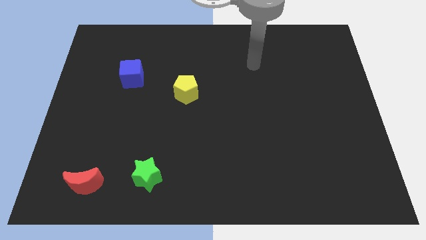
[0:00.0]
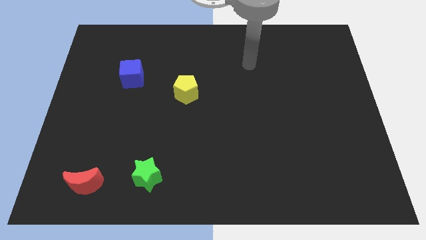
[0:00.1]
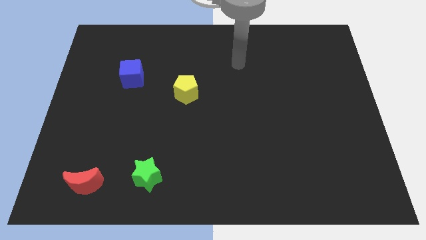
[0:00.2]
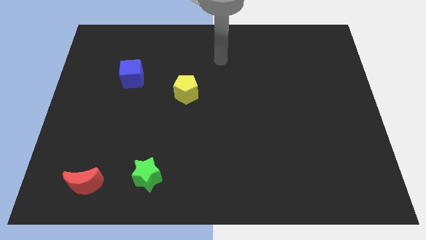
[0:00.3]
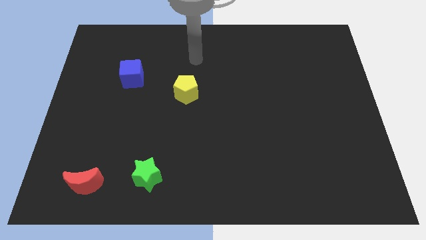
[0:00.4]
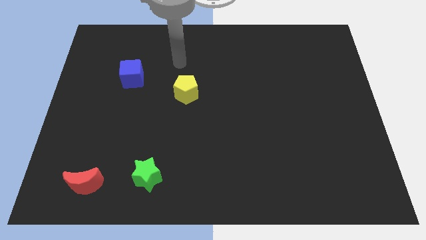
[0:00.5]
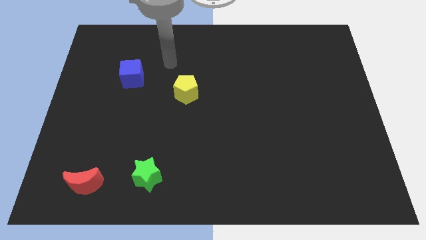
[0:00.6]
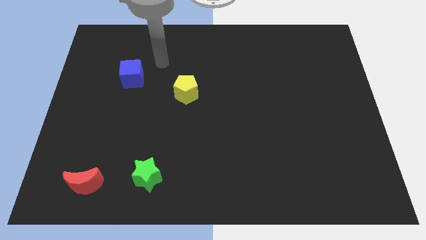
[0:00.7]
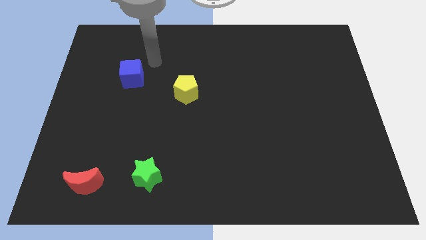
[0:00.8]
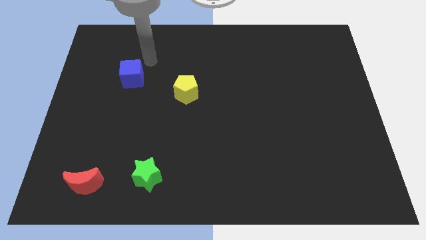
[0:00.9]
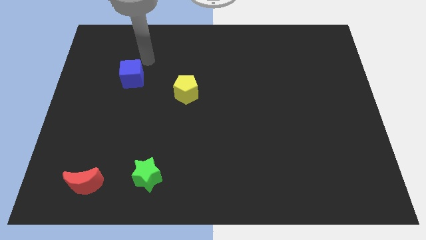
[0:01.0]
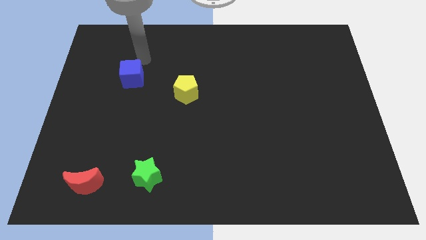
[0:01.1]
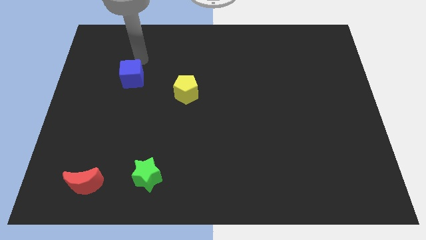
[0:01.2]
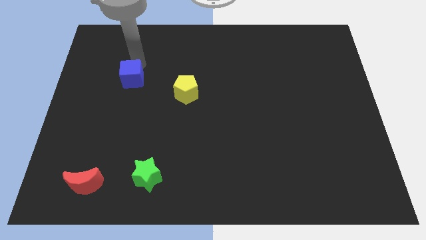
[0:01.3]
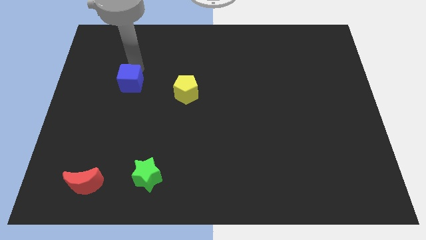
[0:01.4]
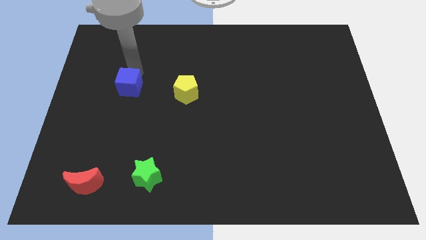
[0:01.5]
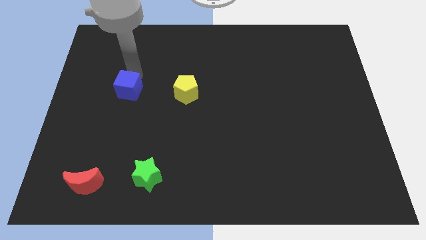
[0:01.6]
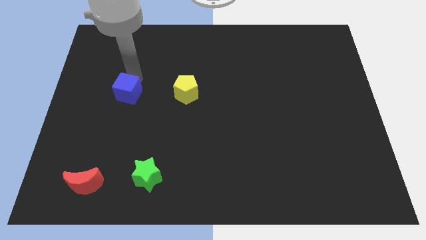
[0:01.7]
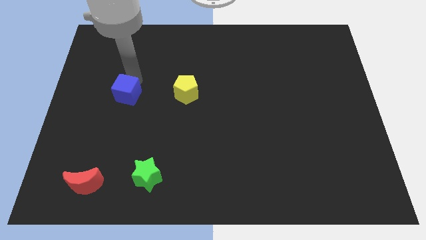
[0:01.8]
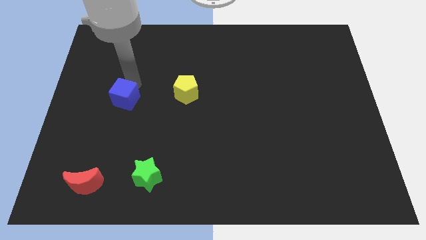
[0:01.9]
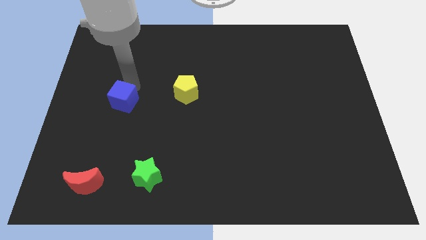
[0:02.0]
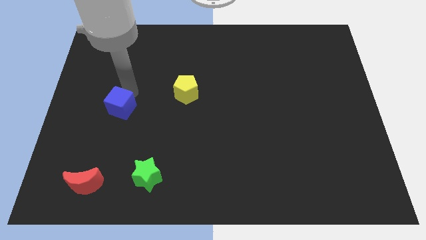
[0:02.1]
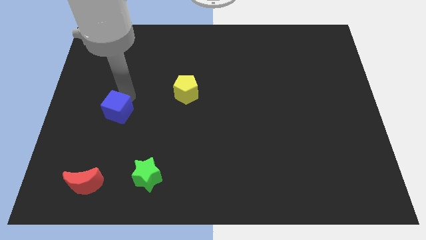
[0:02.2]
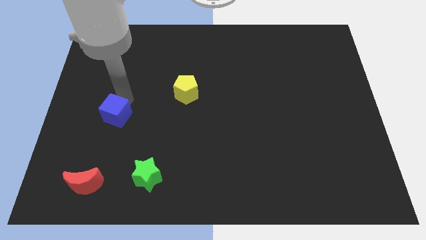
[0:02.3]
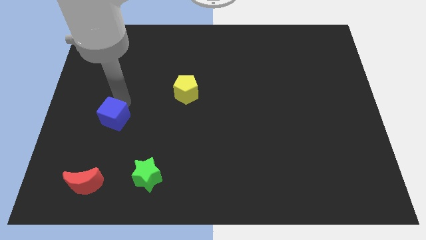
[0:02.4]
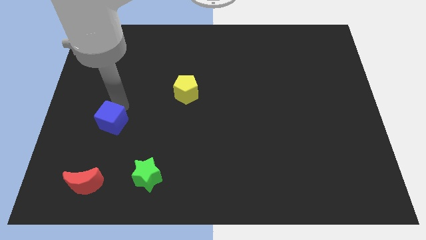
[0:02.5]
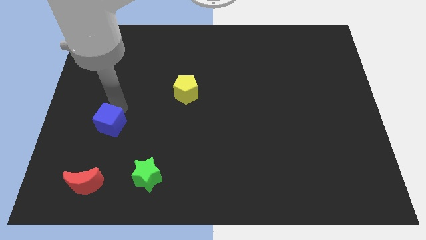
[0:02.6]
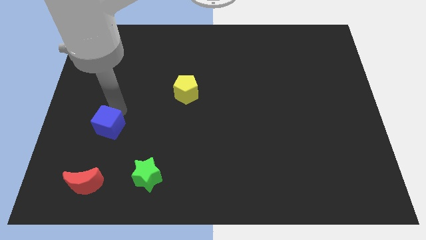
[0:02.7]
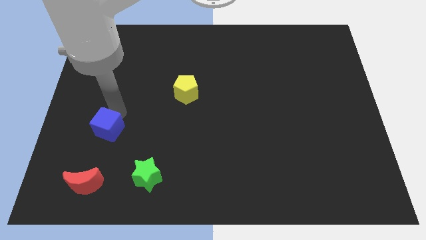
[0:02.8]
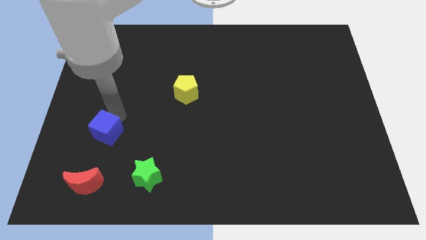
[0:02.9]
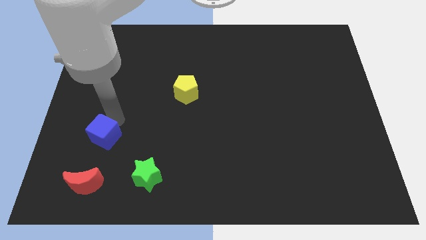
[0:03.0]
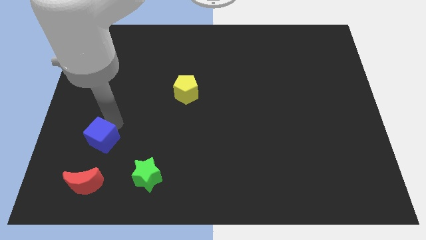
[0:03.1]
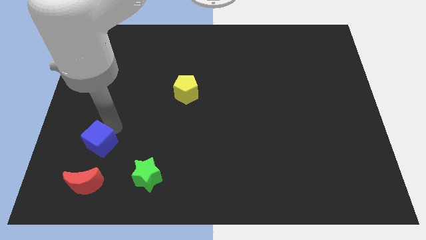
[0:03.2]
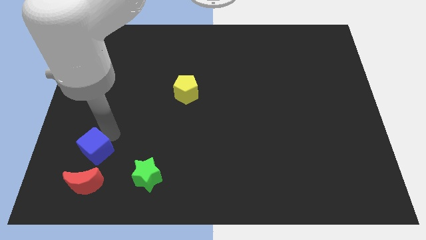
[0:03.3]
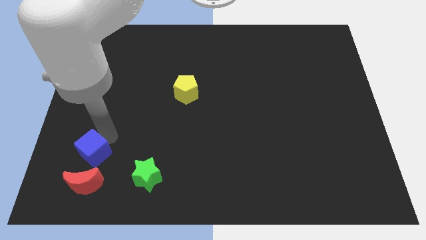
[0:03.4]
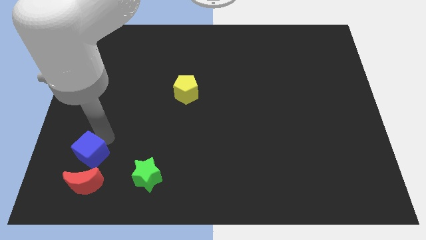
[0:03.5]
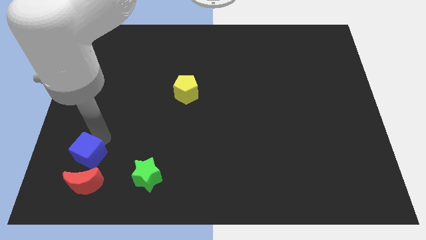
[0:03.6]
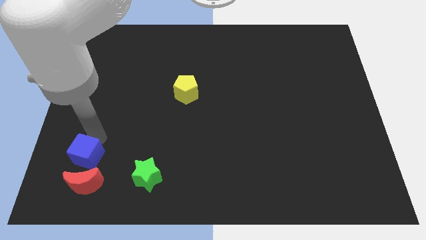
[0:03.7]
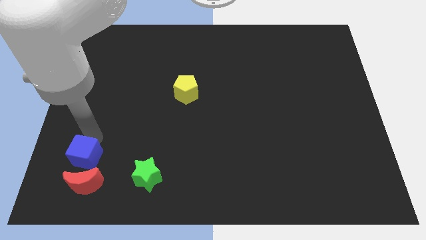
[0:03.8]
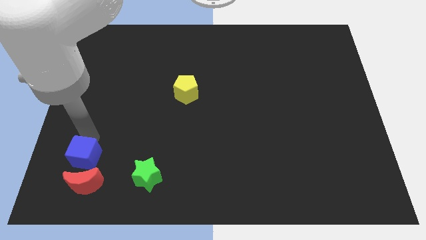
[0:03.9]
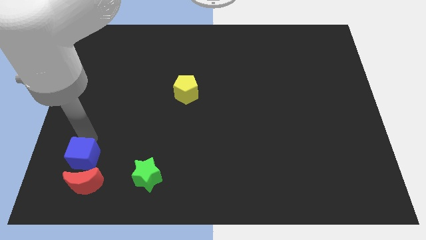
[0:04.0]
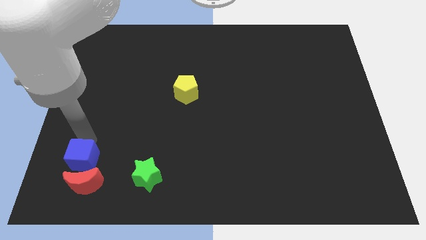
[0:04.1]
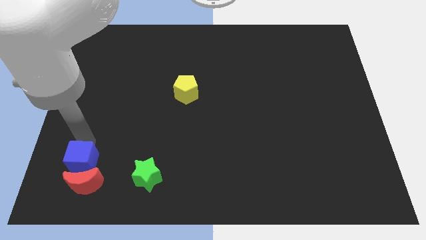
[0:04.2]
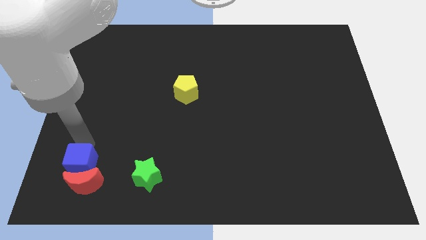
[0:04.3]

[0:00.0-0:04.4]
move the blue cube towards the moon

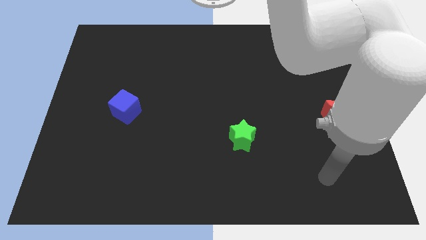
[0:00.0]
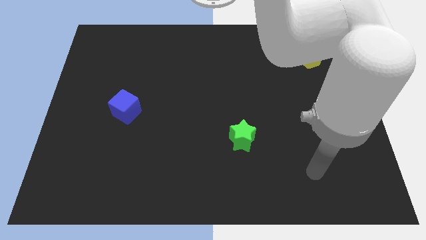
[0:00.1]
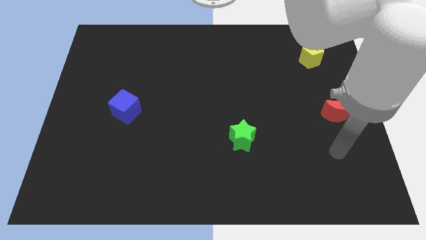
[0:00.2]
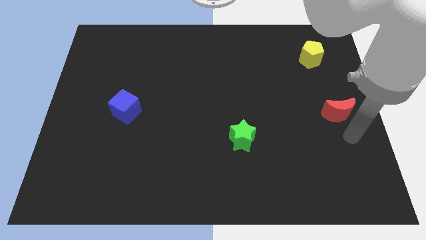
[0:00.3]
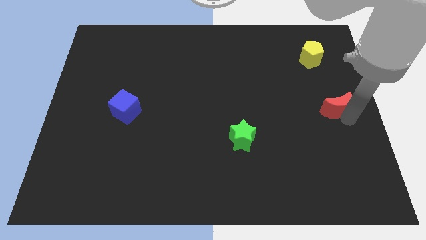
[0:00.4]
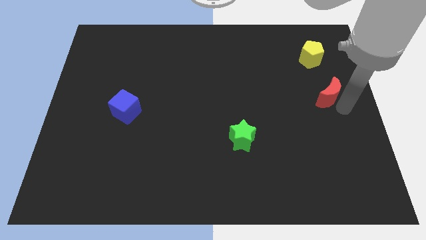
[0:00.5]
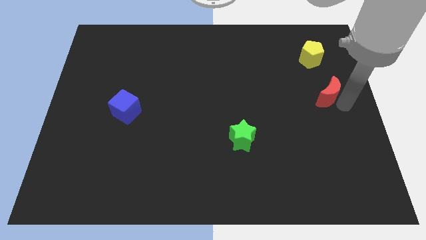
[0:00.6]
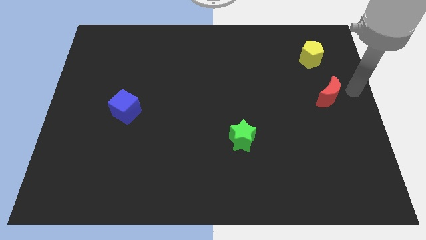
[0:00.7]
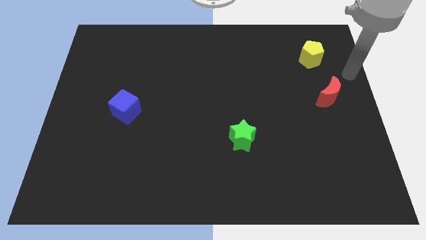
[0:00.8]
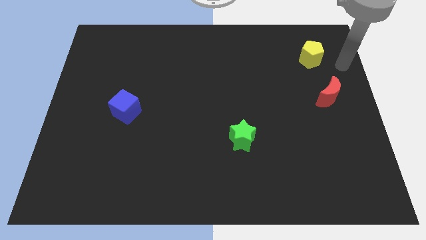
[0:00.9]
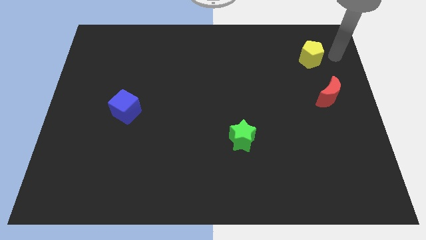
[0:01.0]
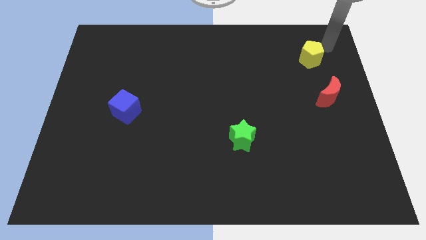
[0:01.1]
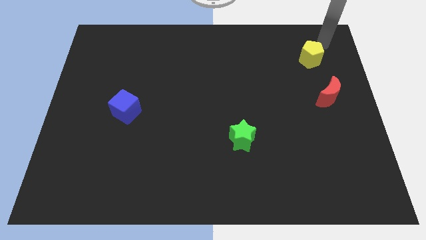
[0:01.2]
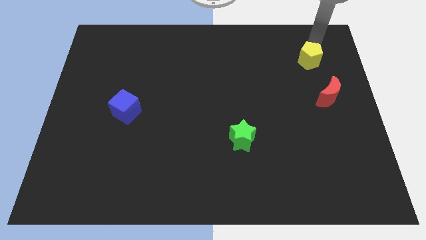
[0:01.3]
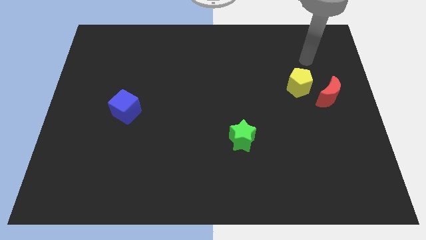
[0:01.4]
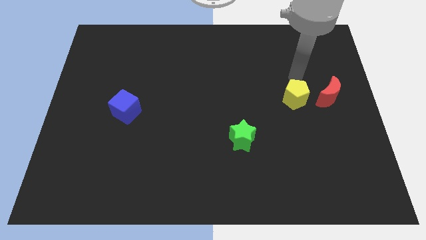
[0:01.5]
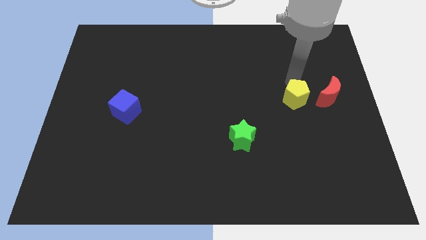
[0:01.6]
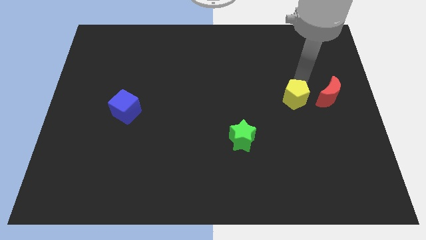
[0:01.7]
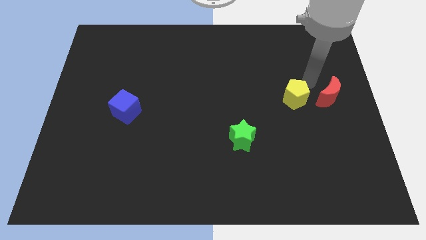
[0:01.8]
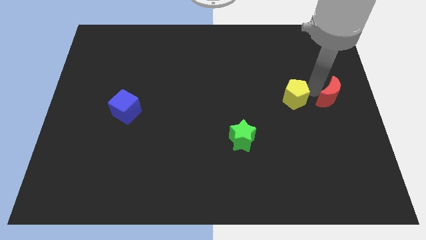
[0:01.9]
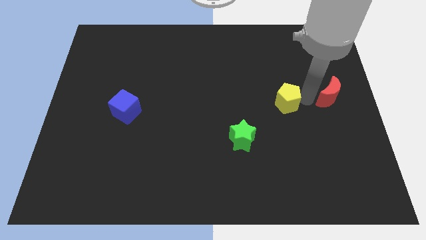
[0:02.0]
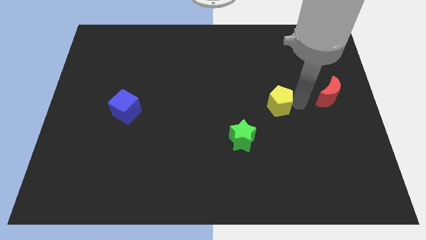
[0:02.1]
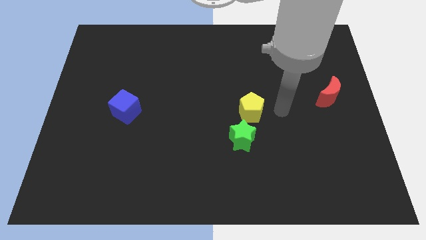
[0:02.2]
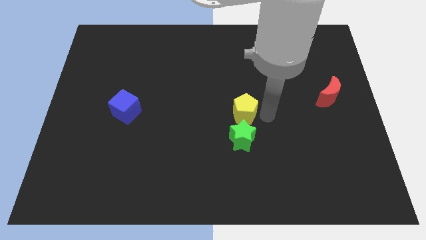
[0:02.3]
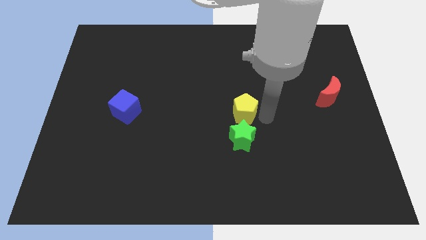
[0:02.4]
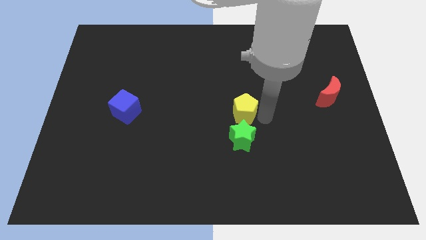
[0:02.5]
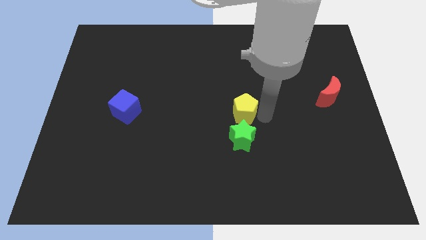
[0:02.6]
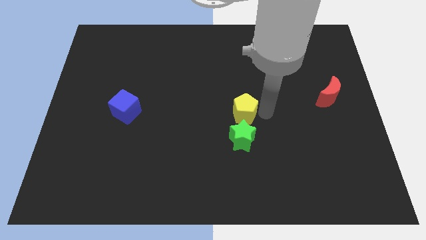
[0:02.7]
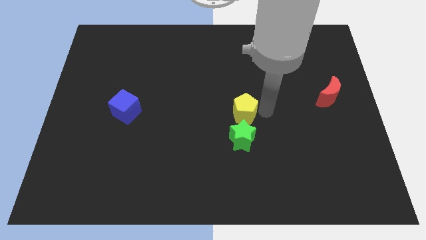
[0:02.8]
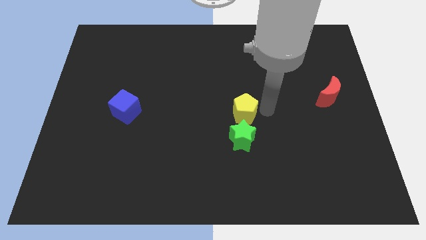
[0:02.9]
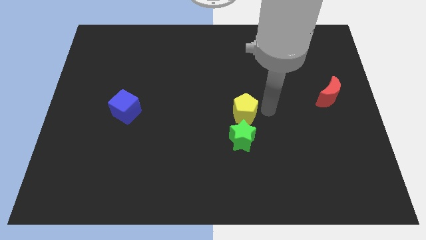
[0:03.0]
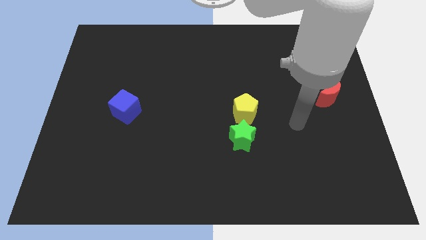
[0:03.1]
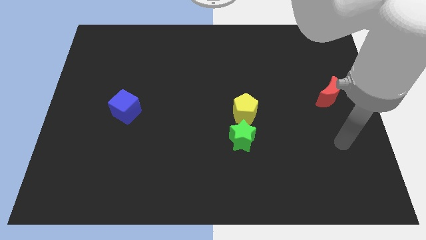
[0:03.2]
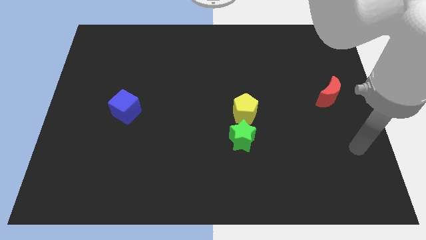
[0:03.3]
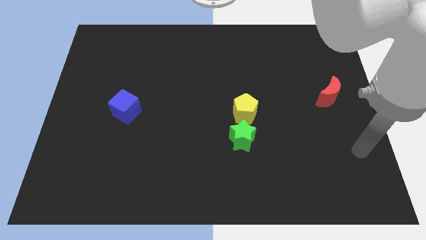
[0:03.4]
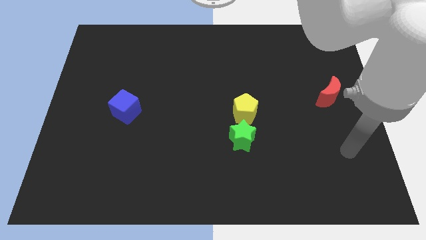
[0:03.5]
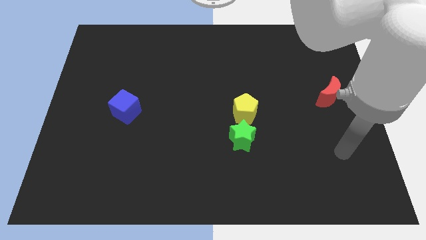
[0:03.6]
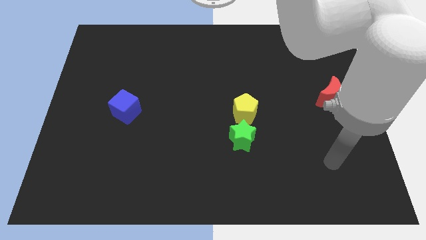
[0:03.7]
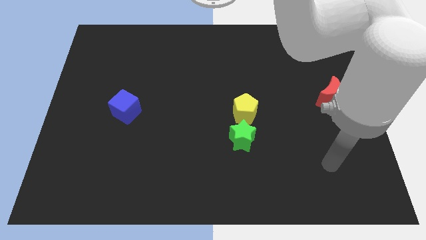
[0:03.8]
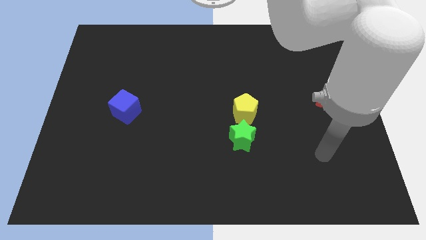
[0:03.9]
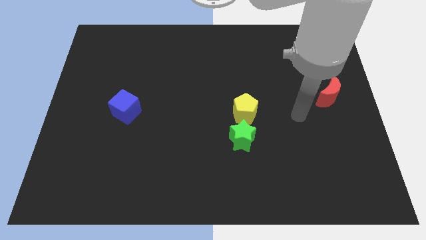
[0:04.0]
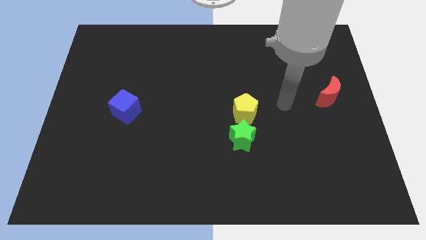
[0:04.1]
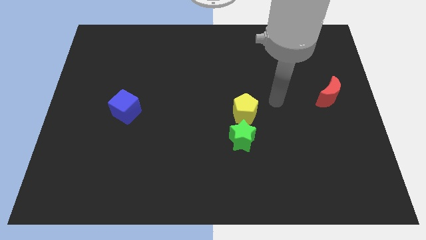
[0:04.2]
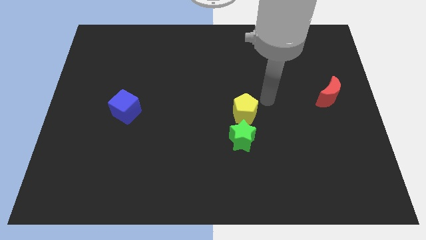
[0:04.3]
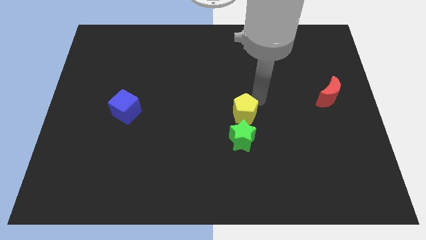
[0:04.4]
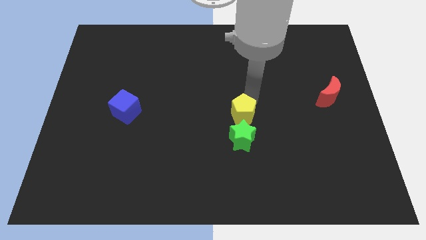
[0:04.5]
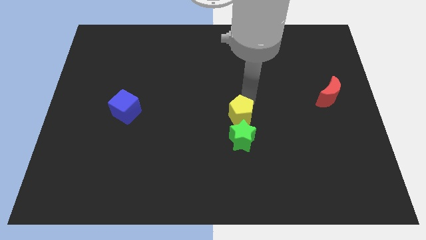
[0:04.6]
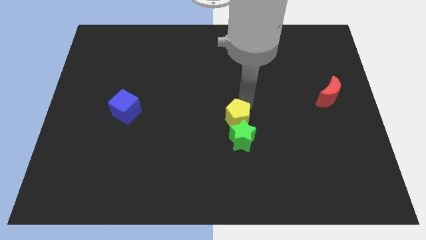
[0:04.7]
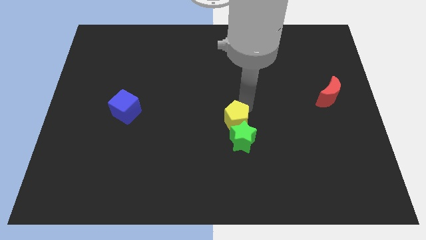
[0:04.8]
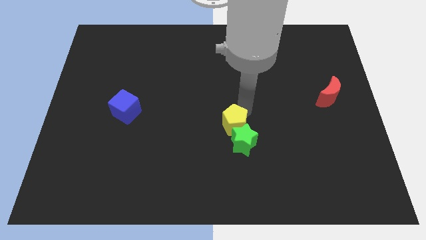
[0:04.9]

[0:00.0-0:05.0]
move the yellow pentagon towards the star
